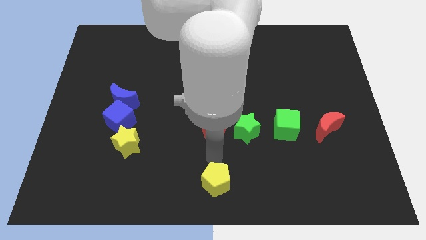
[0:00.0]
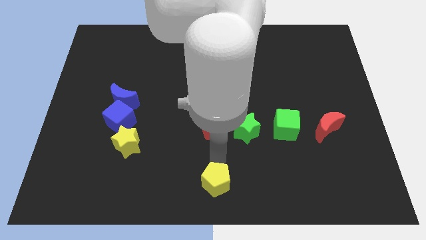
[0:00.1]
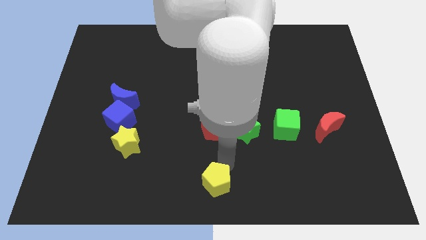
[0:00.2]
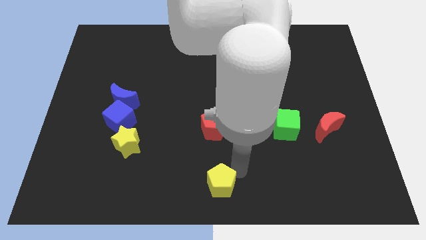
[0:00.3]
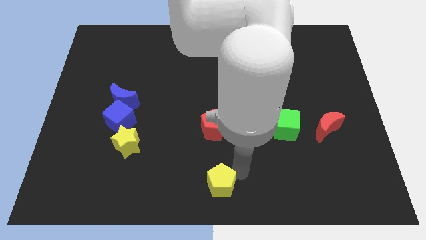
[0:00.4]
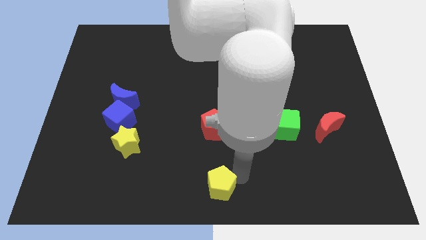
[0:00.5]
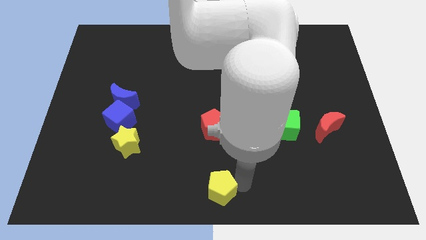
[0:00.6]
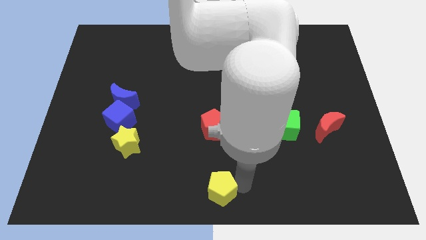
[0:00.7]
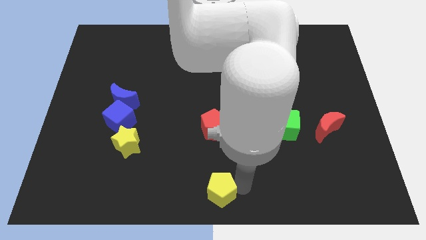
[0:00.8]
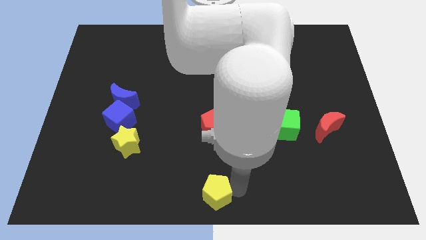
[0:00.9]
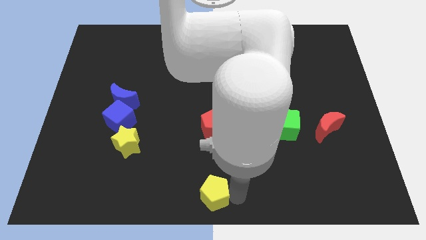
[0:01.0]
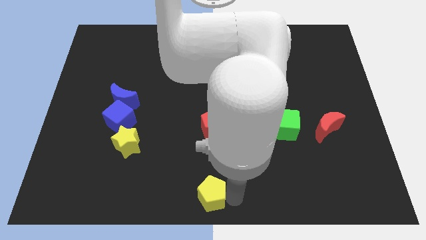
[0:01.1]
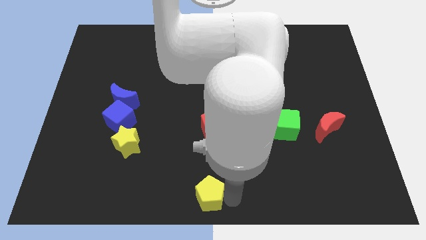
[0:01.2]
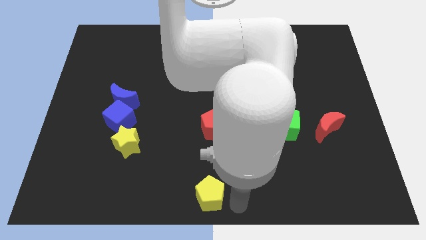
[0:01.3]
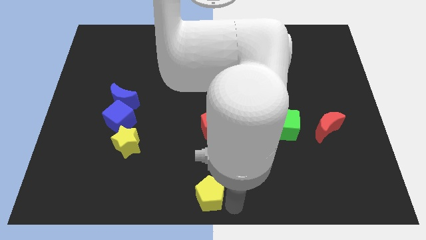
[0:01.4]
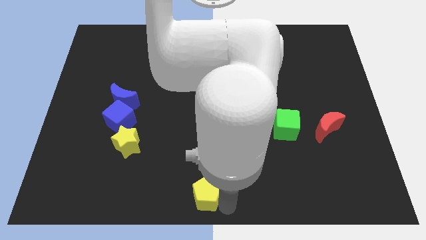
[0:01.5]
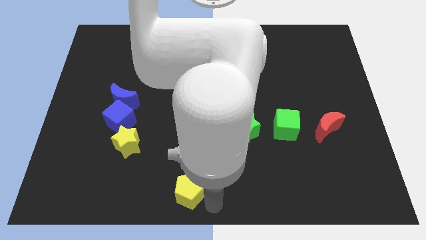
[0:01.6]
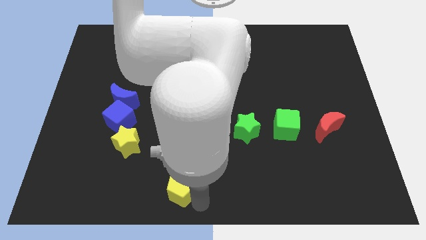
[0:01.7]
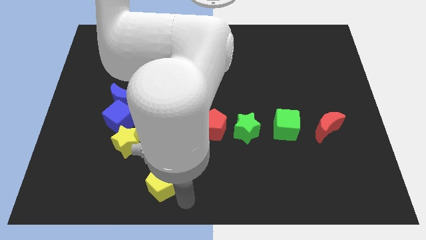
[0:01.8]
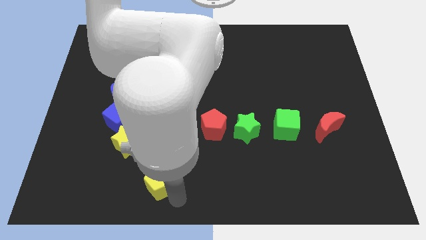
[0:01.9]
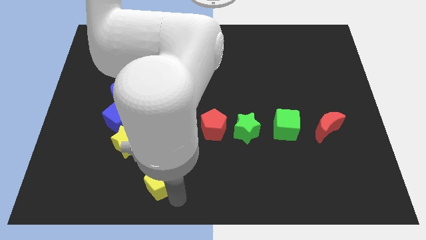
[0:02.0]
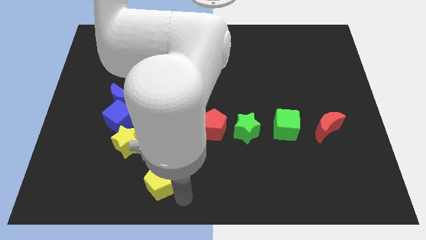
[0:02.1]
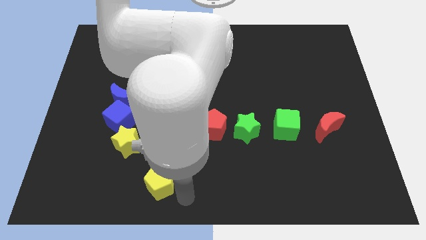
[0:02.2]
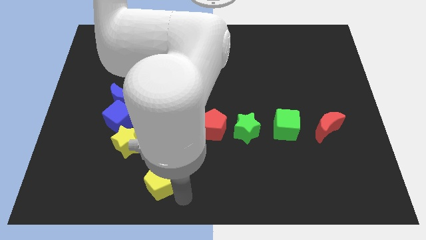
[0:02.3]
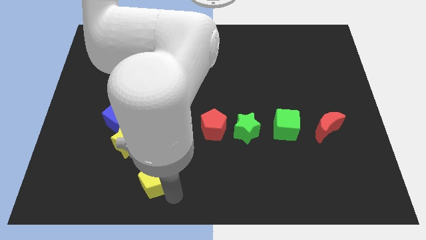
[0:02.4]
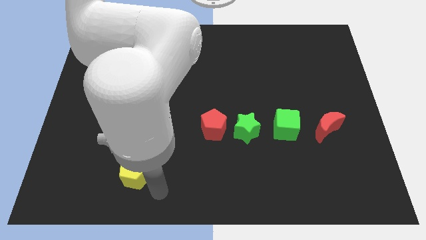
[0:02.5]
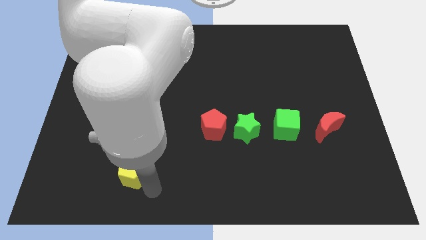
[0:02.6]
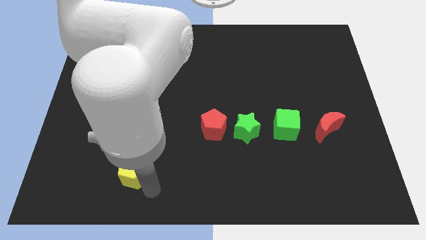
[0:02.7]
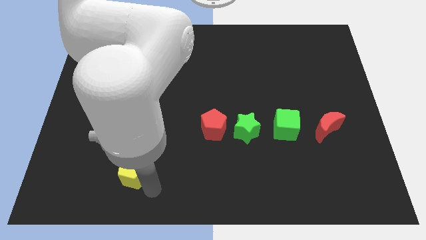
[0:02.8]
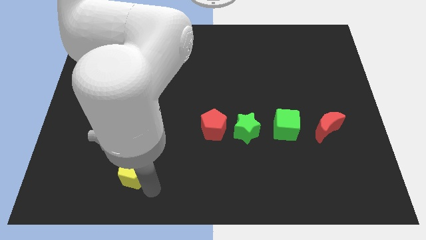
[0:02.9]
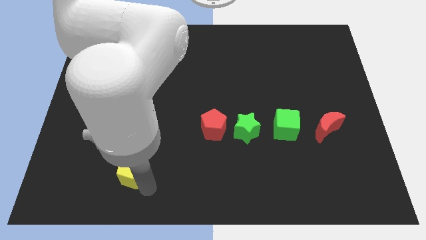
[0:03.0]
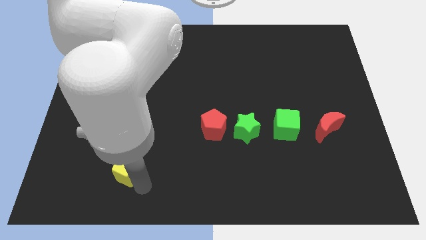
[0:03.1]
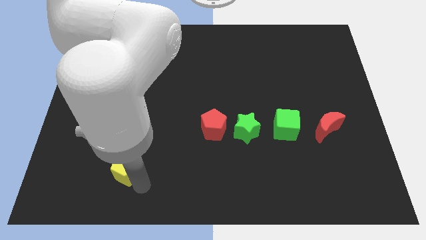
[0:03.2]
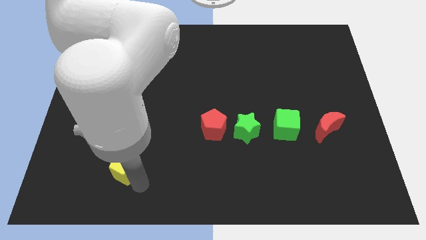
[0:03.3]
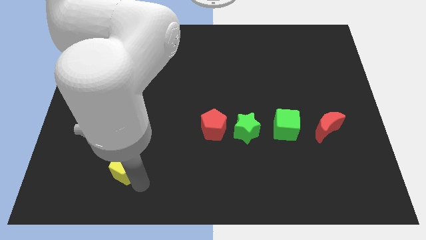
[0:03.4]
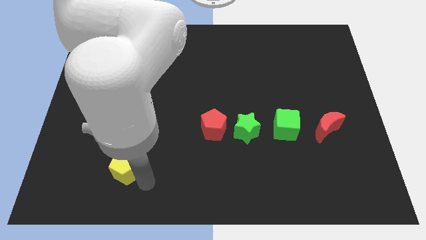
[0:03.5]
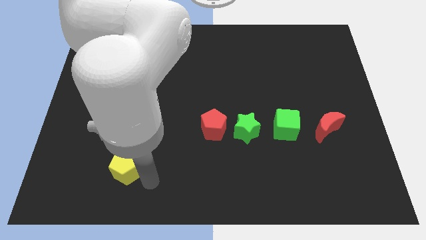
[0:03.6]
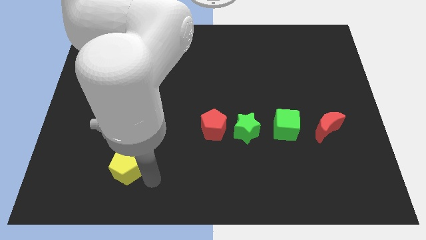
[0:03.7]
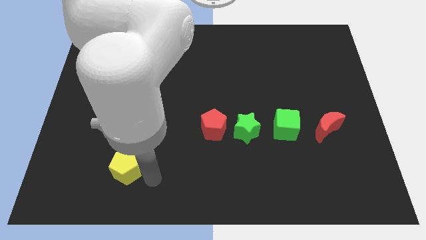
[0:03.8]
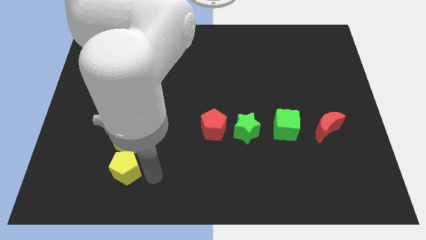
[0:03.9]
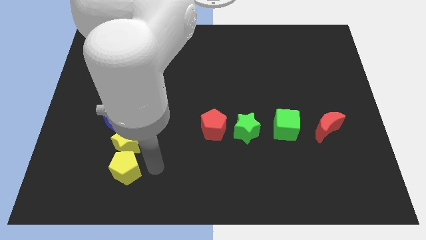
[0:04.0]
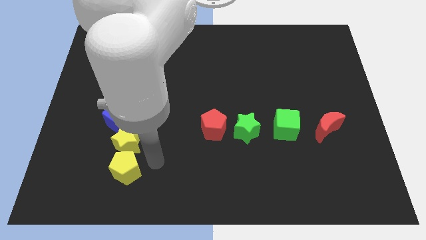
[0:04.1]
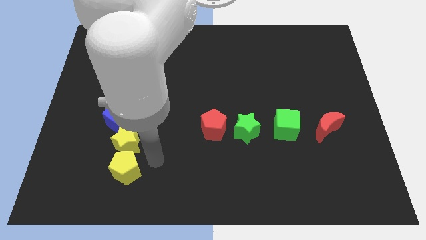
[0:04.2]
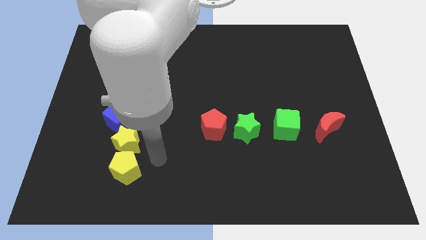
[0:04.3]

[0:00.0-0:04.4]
push the yellow pentagon to the bottom of the yellow star

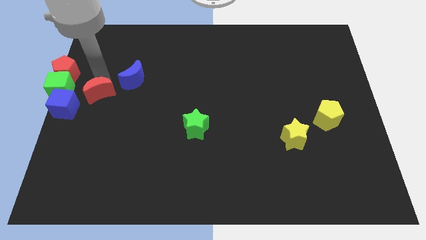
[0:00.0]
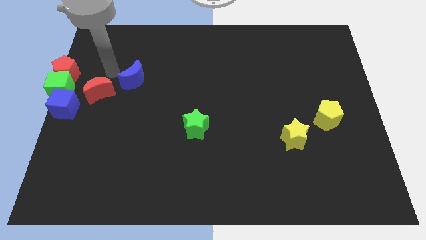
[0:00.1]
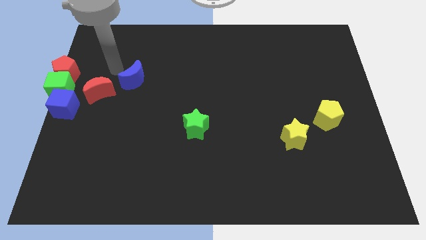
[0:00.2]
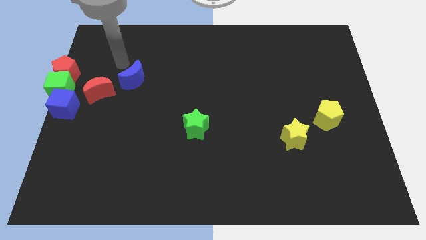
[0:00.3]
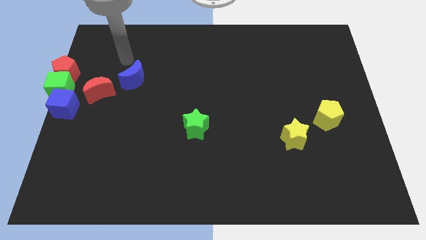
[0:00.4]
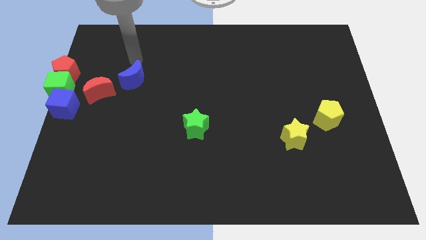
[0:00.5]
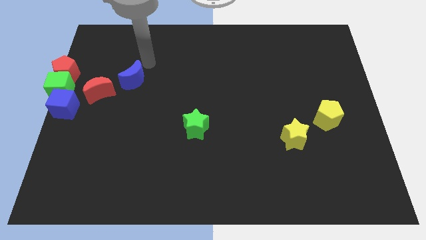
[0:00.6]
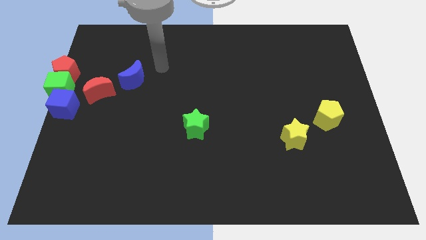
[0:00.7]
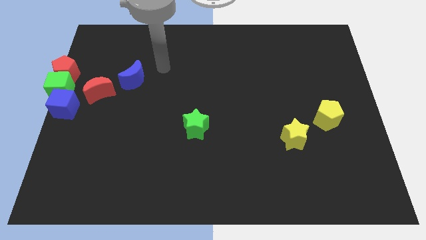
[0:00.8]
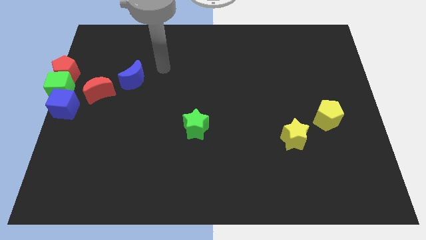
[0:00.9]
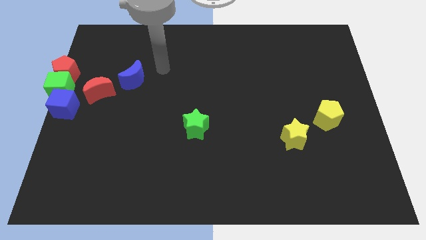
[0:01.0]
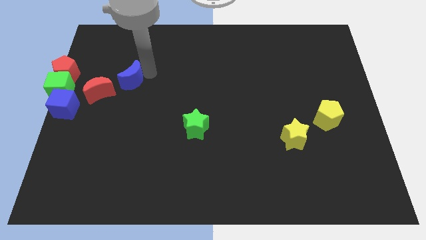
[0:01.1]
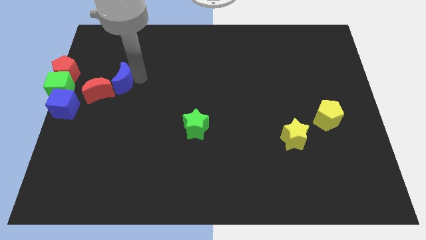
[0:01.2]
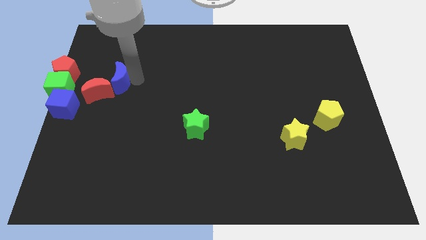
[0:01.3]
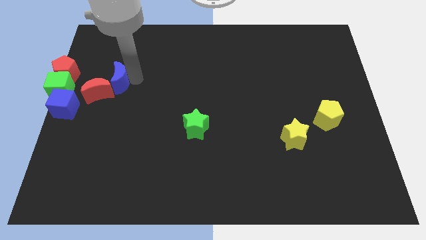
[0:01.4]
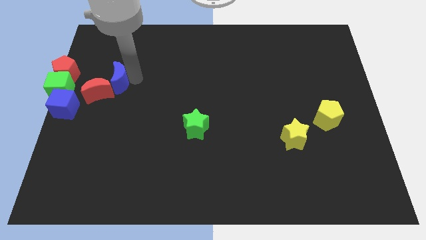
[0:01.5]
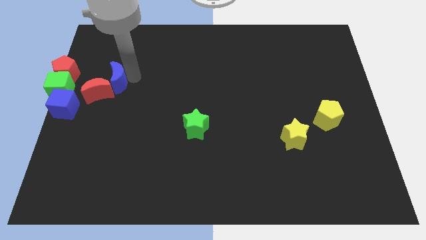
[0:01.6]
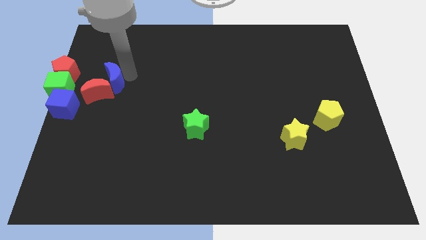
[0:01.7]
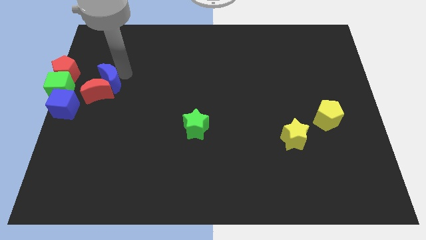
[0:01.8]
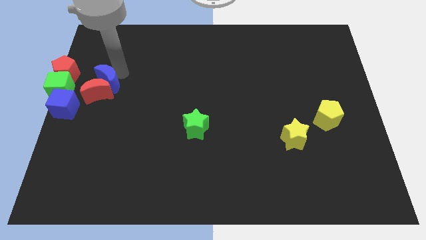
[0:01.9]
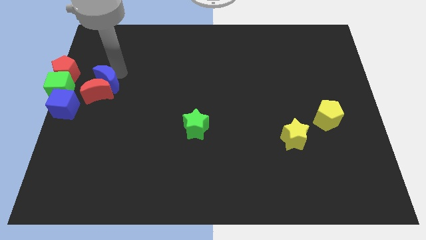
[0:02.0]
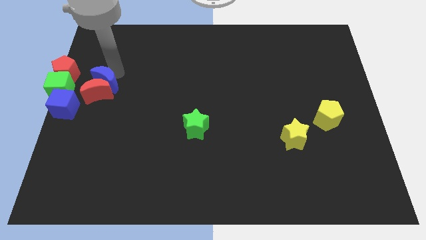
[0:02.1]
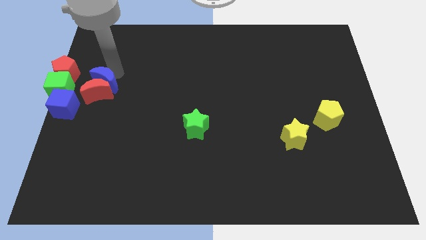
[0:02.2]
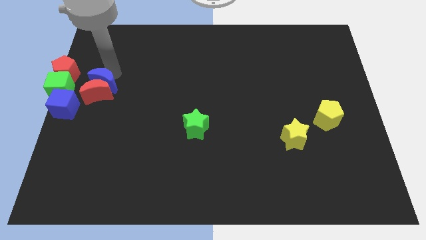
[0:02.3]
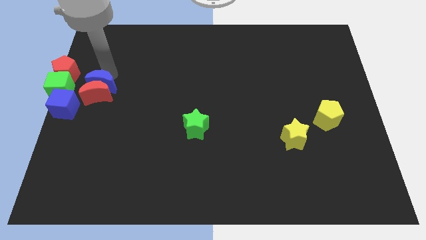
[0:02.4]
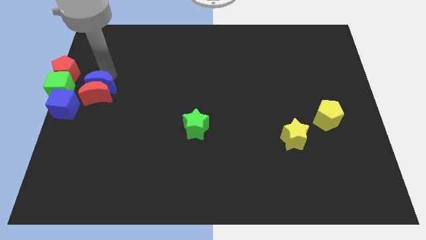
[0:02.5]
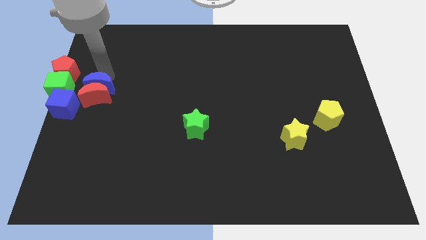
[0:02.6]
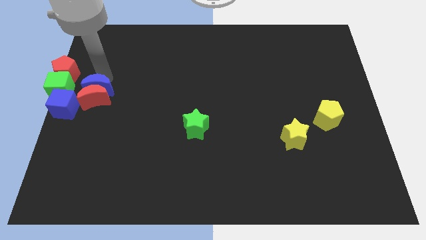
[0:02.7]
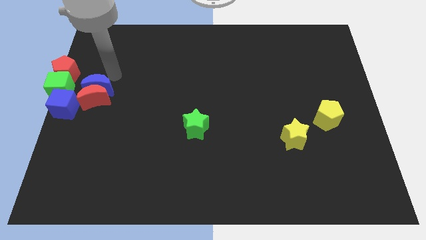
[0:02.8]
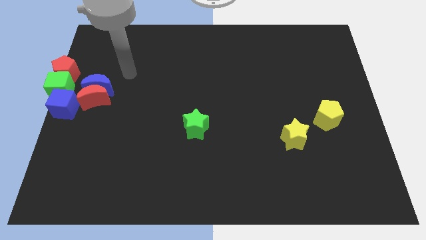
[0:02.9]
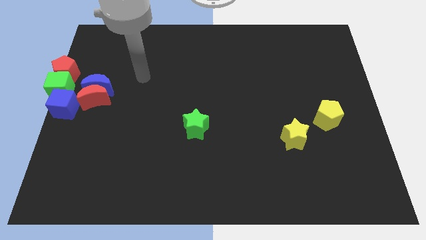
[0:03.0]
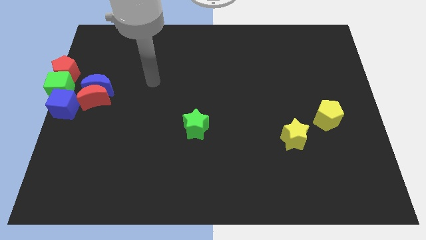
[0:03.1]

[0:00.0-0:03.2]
push the blue moon near to the red moon

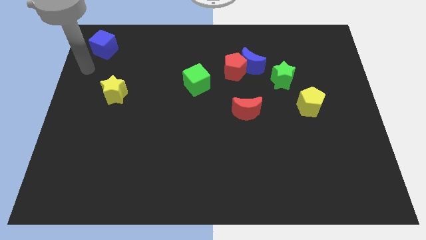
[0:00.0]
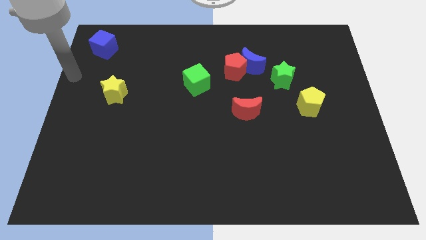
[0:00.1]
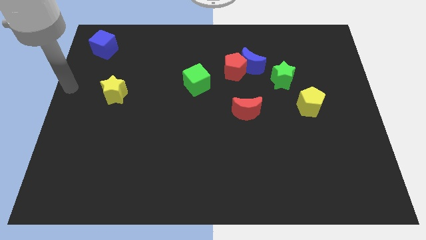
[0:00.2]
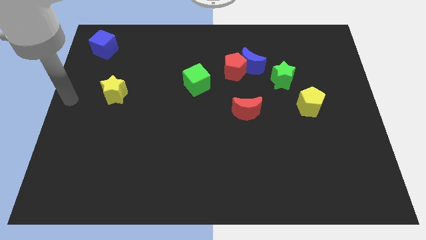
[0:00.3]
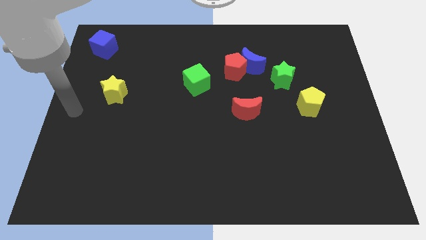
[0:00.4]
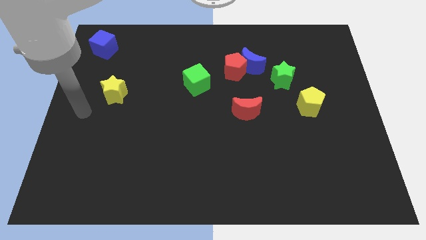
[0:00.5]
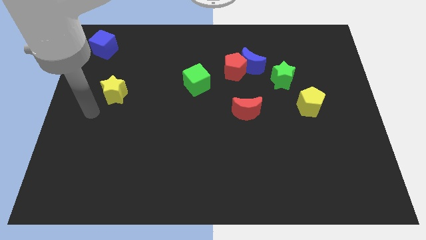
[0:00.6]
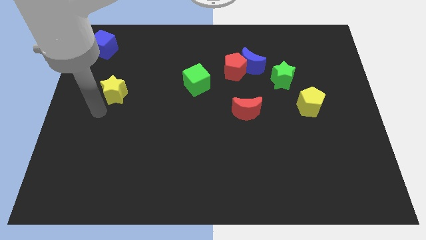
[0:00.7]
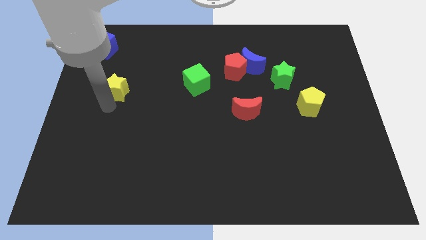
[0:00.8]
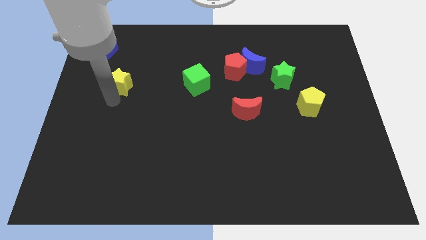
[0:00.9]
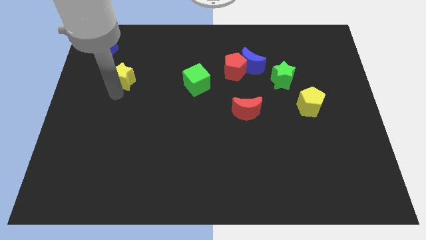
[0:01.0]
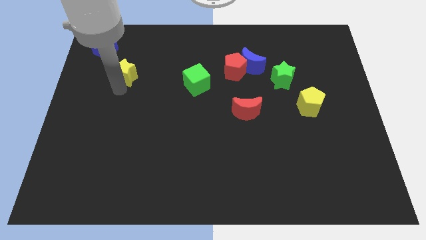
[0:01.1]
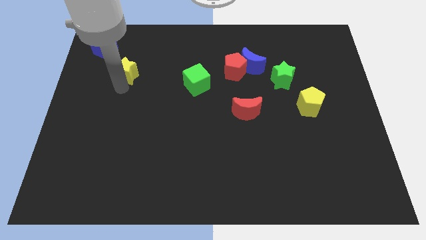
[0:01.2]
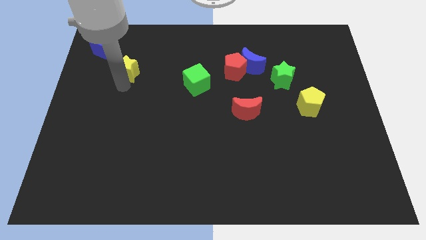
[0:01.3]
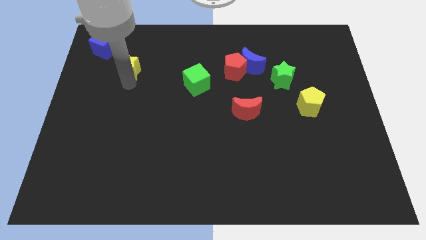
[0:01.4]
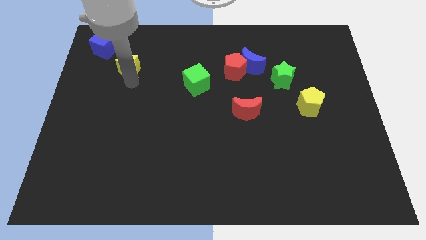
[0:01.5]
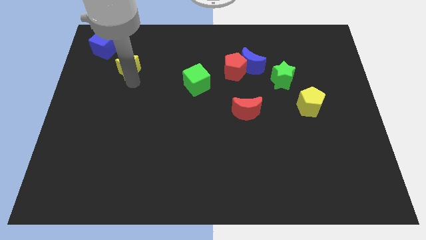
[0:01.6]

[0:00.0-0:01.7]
move the yellow star to the top of the board
